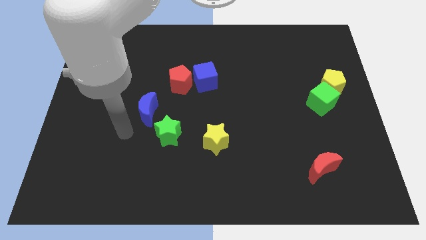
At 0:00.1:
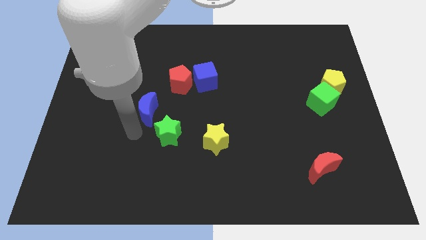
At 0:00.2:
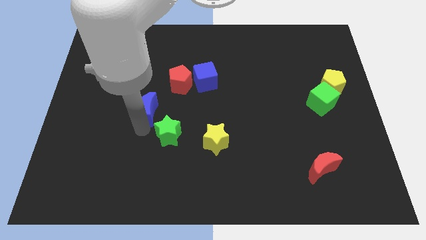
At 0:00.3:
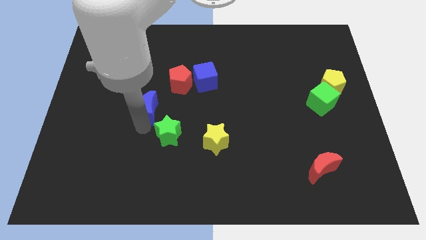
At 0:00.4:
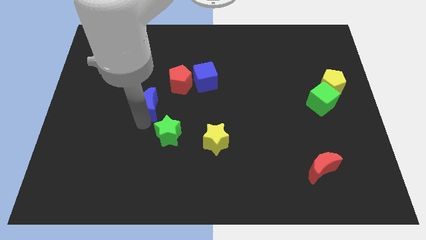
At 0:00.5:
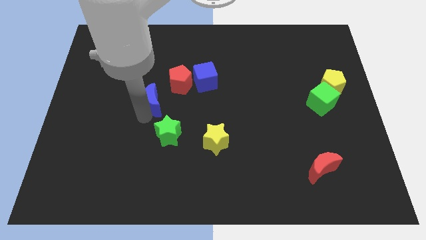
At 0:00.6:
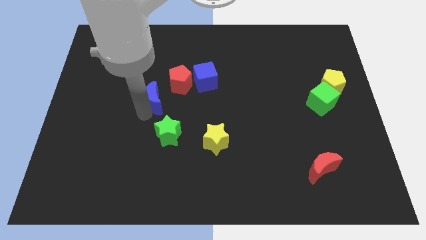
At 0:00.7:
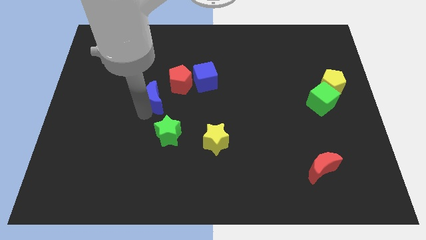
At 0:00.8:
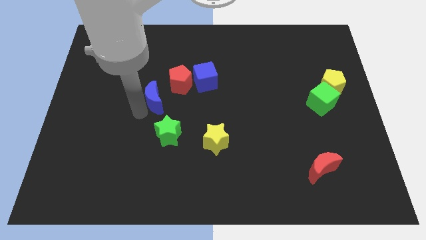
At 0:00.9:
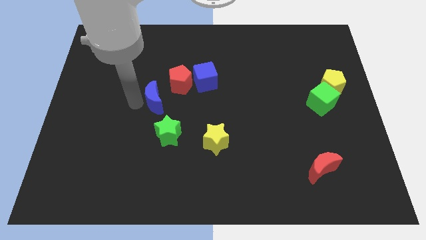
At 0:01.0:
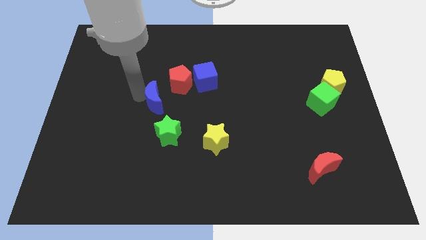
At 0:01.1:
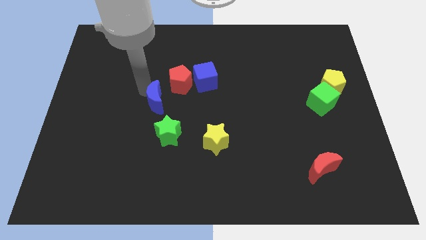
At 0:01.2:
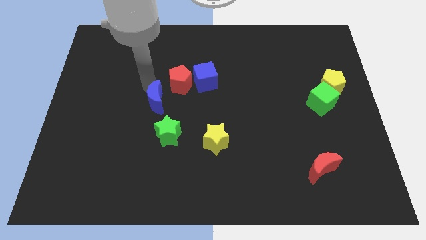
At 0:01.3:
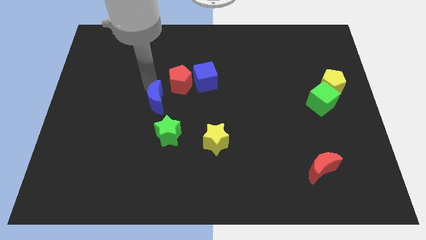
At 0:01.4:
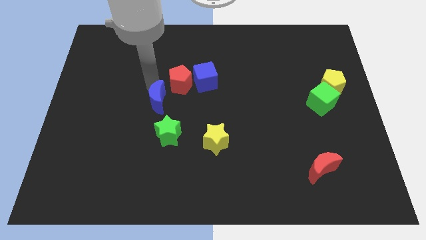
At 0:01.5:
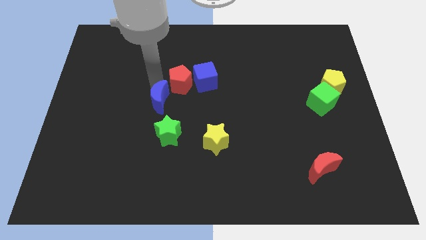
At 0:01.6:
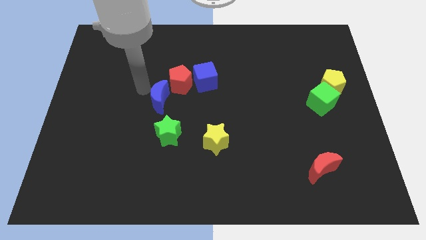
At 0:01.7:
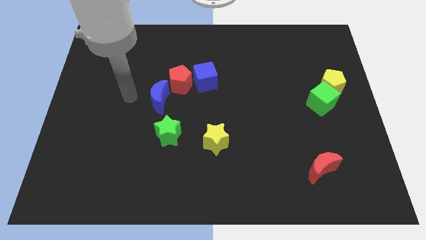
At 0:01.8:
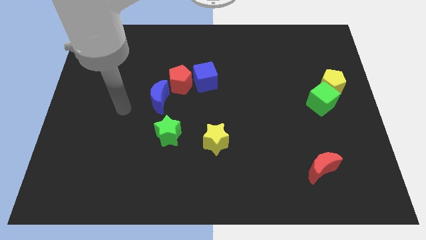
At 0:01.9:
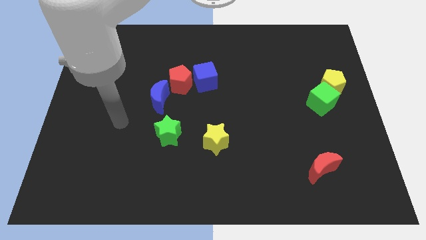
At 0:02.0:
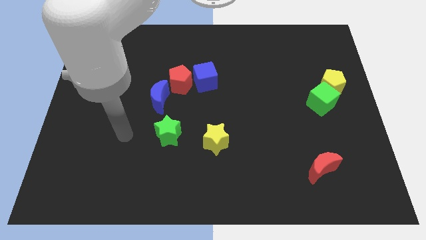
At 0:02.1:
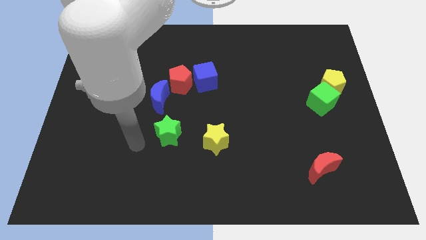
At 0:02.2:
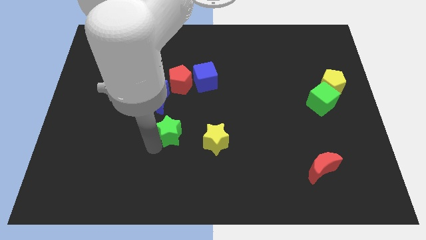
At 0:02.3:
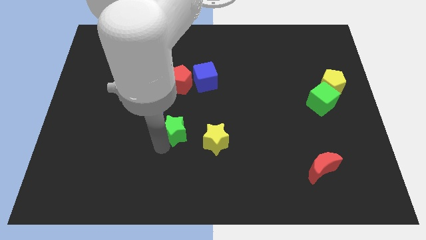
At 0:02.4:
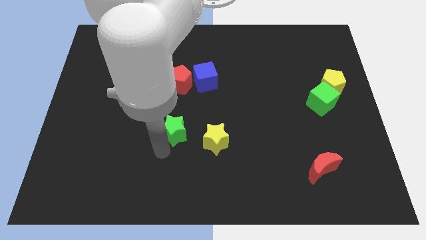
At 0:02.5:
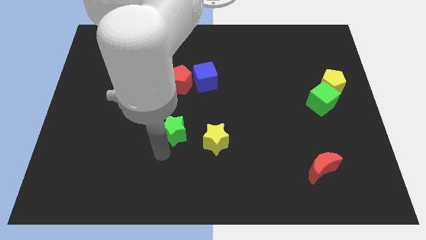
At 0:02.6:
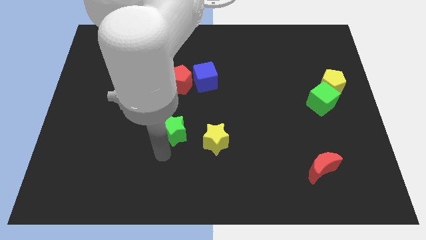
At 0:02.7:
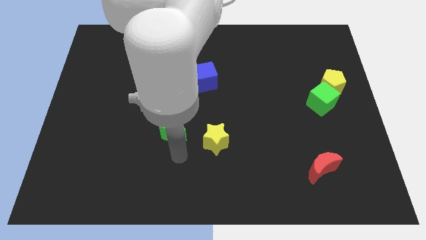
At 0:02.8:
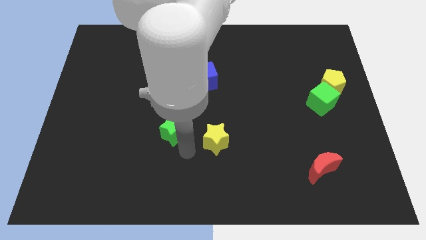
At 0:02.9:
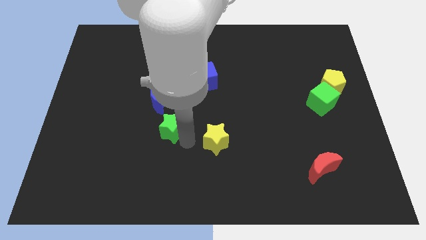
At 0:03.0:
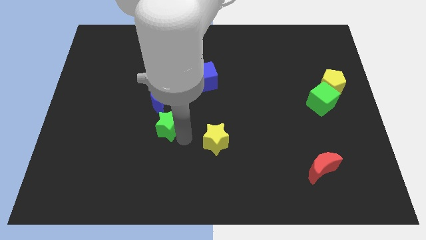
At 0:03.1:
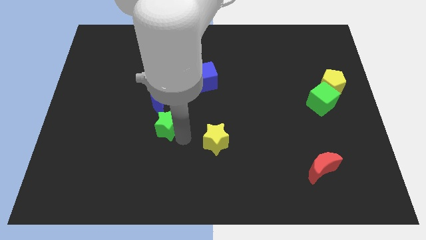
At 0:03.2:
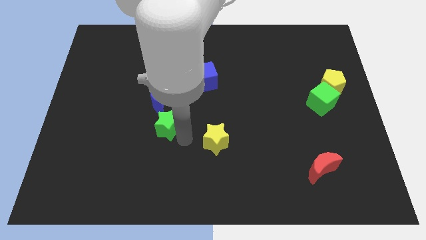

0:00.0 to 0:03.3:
move the arm towards the right of the green star

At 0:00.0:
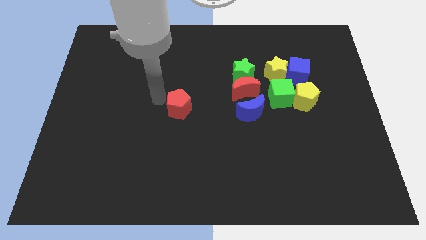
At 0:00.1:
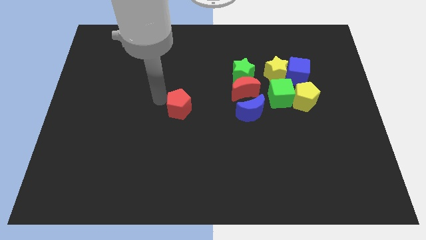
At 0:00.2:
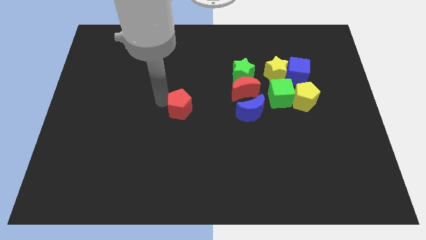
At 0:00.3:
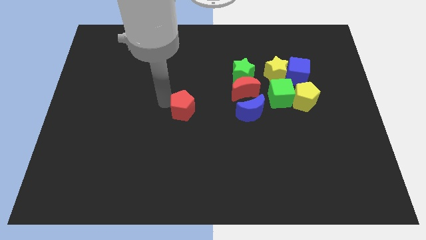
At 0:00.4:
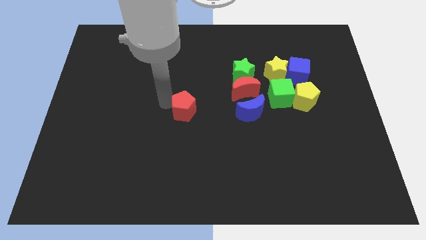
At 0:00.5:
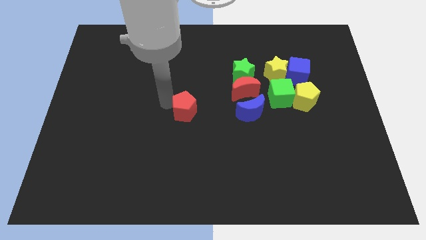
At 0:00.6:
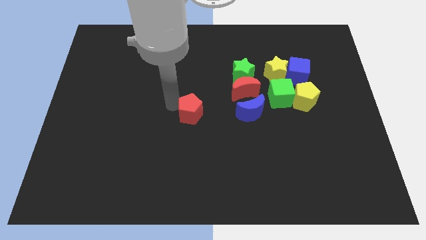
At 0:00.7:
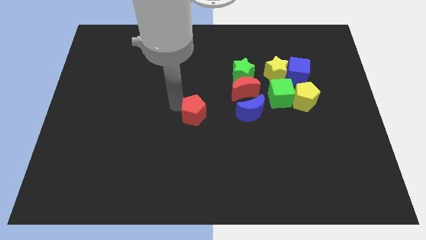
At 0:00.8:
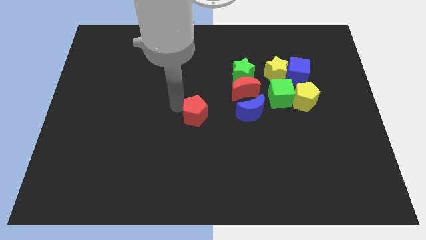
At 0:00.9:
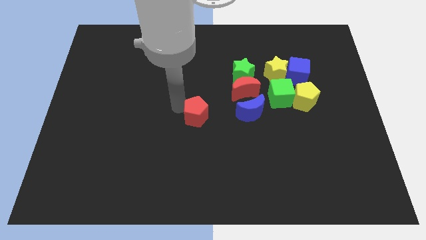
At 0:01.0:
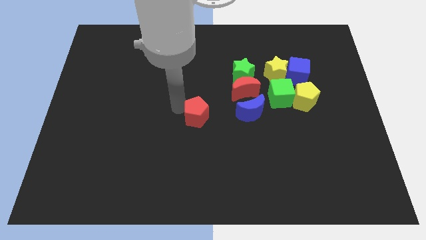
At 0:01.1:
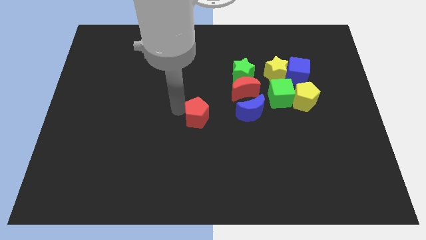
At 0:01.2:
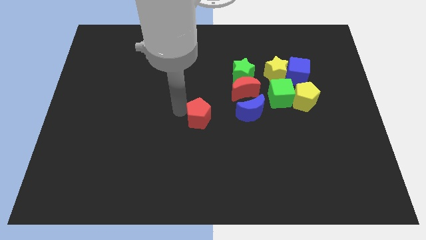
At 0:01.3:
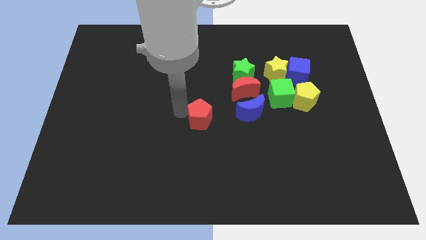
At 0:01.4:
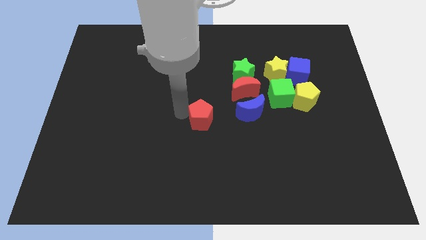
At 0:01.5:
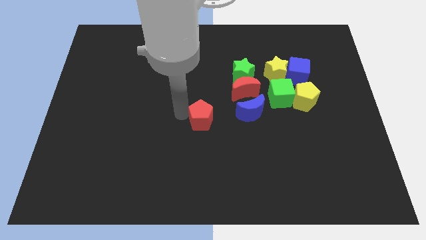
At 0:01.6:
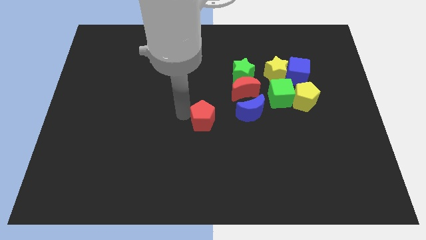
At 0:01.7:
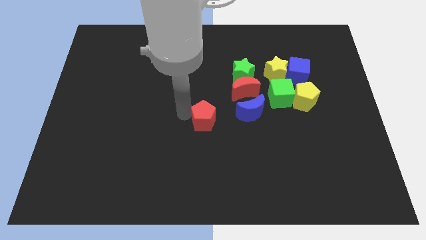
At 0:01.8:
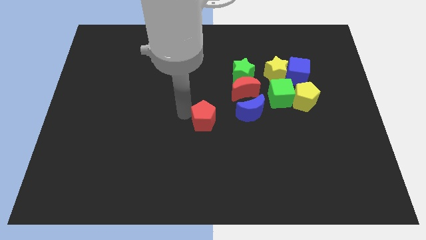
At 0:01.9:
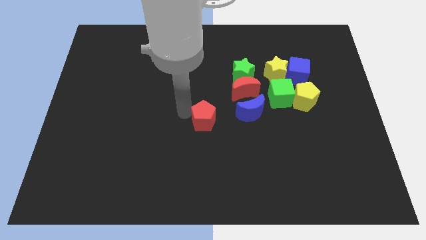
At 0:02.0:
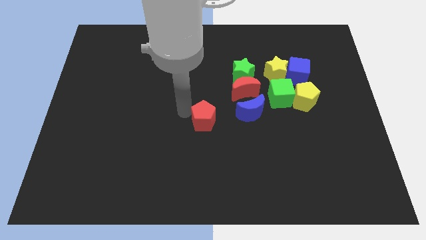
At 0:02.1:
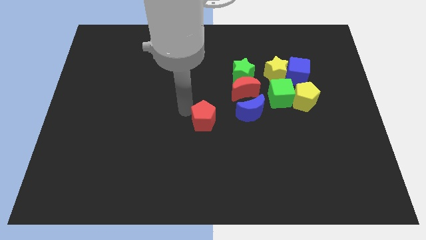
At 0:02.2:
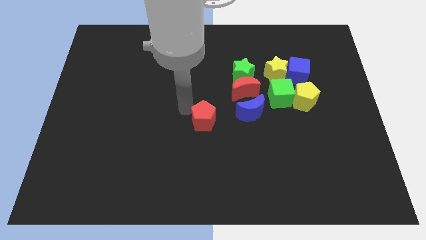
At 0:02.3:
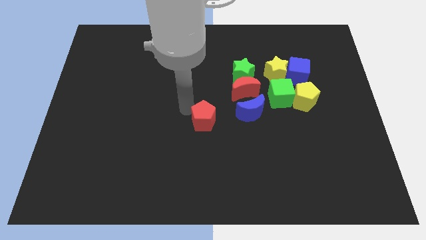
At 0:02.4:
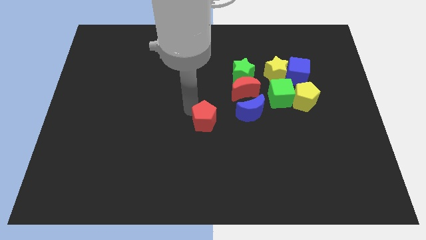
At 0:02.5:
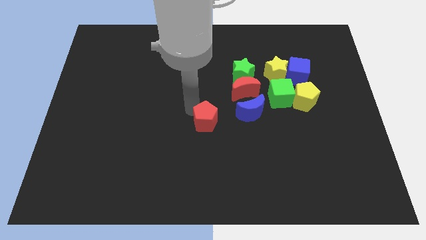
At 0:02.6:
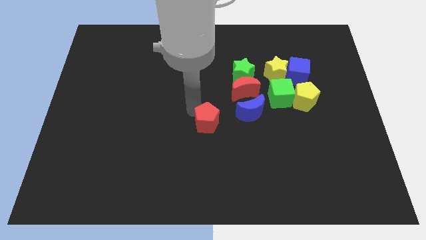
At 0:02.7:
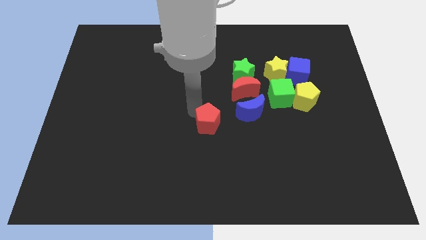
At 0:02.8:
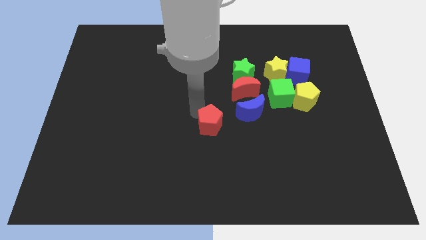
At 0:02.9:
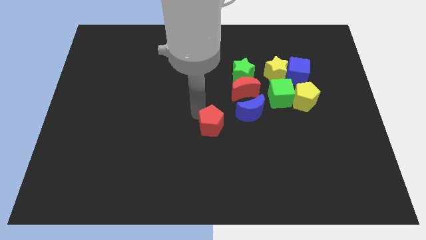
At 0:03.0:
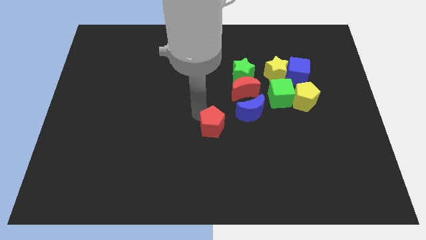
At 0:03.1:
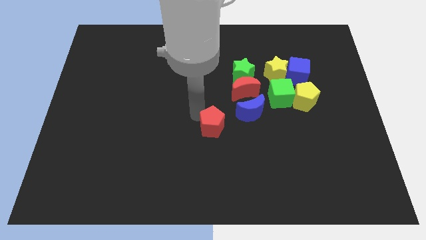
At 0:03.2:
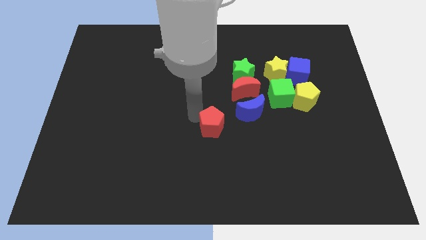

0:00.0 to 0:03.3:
push the red pentagon slightly downwards

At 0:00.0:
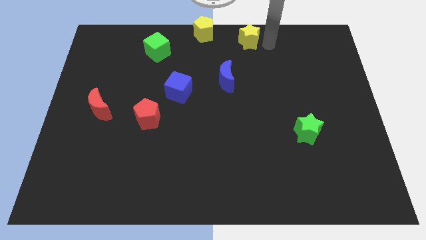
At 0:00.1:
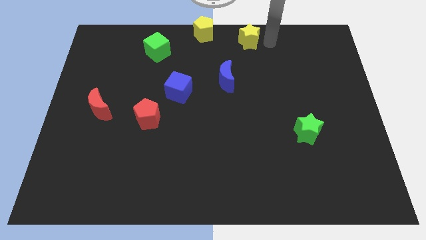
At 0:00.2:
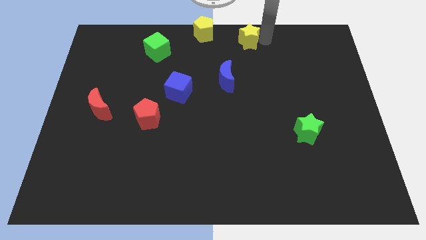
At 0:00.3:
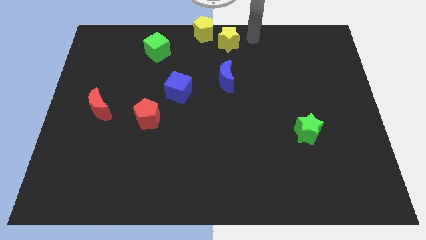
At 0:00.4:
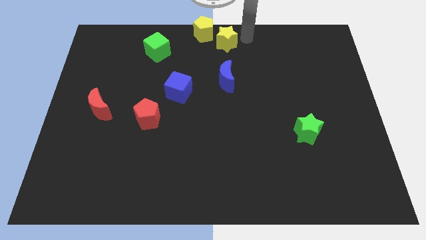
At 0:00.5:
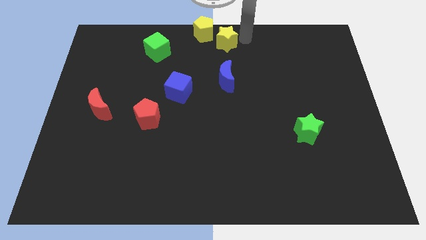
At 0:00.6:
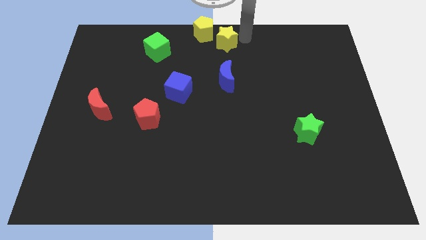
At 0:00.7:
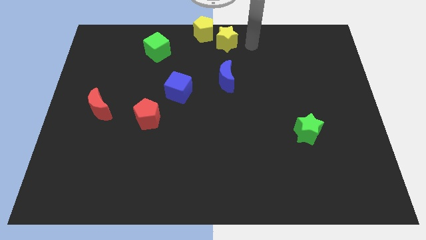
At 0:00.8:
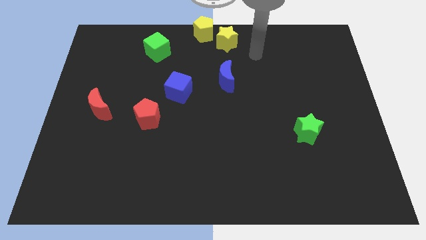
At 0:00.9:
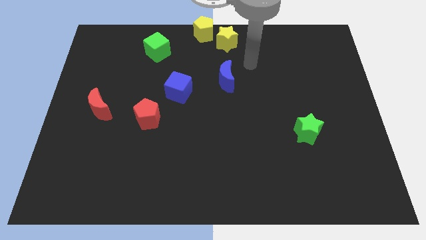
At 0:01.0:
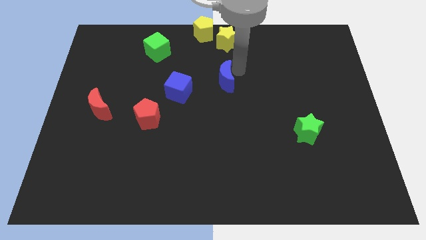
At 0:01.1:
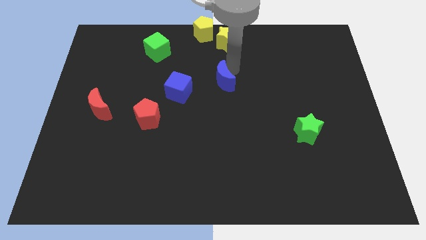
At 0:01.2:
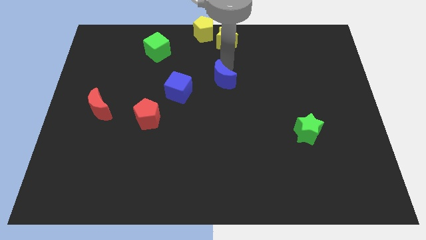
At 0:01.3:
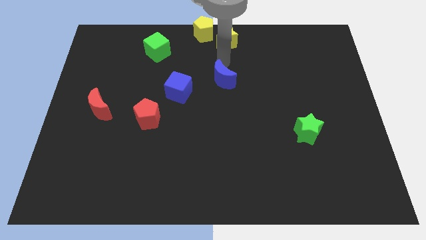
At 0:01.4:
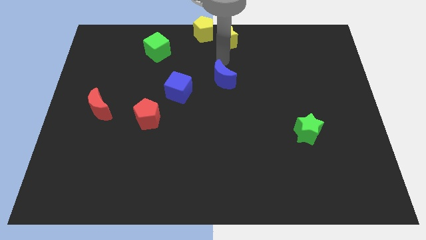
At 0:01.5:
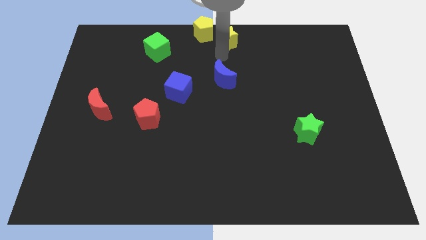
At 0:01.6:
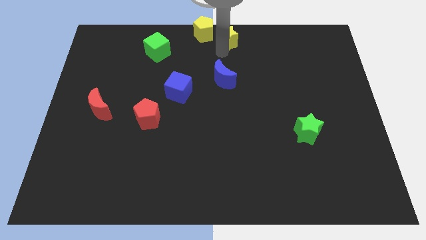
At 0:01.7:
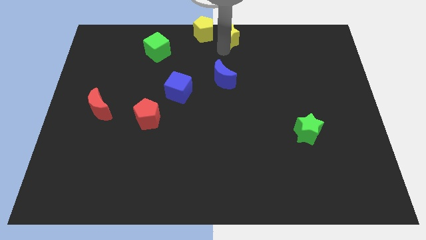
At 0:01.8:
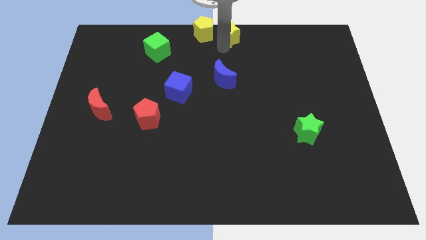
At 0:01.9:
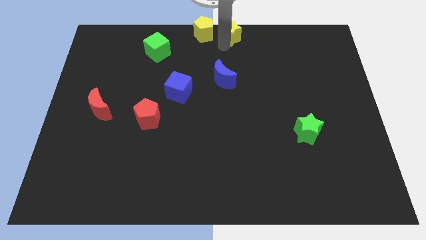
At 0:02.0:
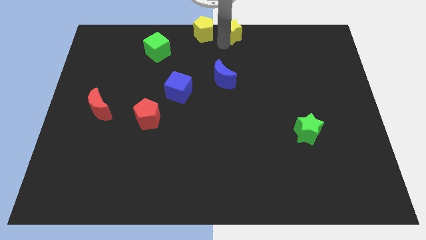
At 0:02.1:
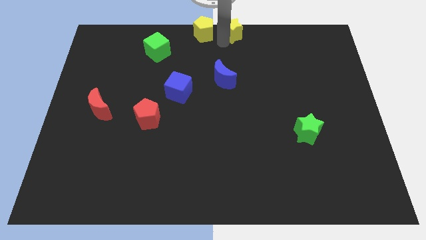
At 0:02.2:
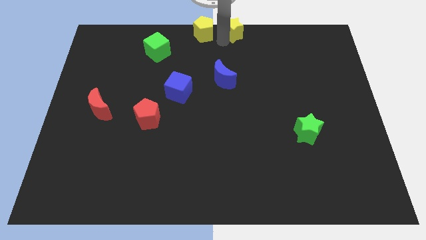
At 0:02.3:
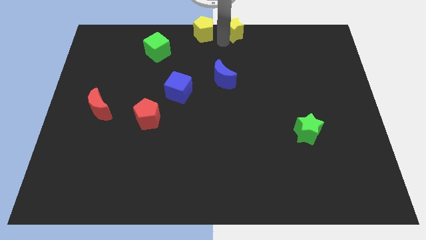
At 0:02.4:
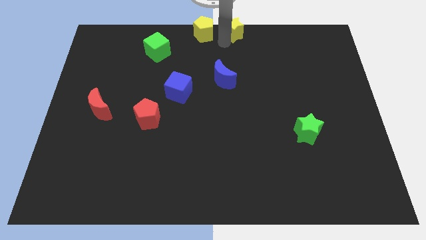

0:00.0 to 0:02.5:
place the yellow star right to the yellow pentagon
